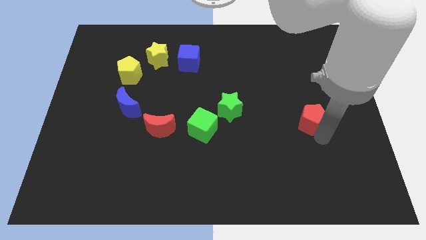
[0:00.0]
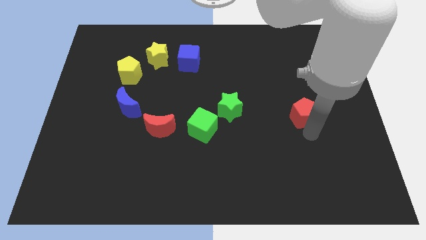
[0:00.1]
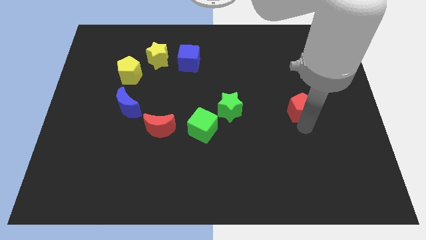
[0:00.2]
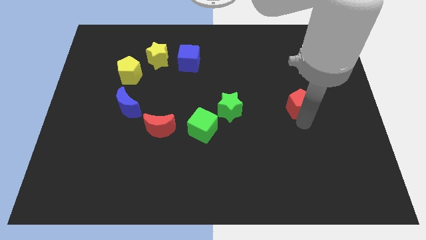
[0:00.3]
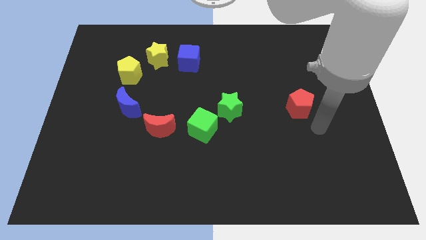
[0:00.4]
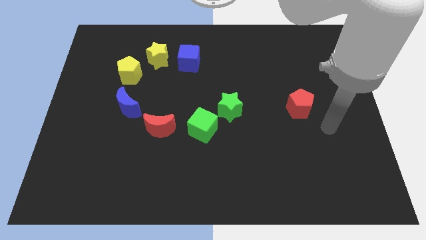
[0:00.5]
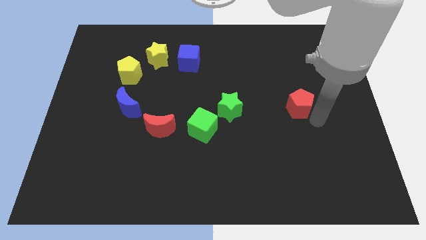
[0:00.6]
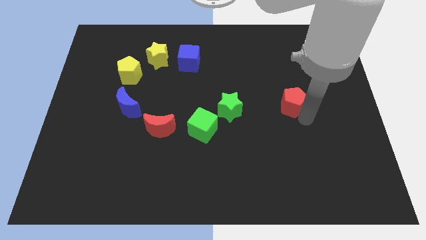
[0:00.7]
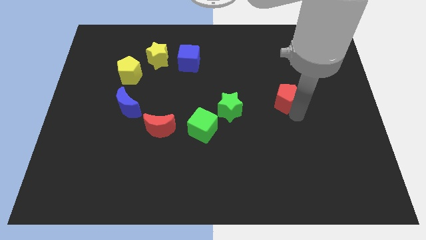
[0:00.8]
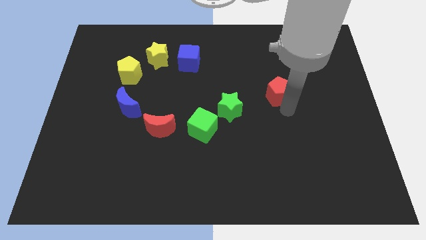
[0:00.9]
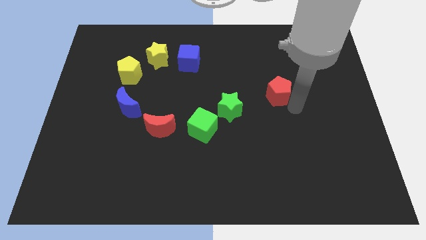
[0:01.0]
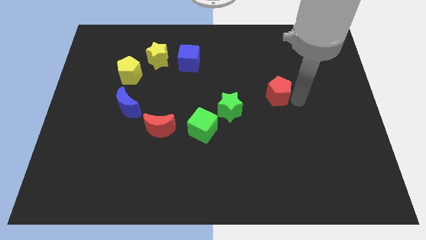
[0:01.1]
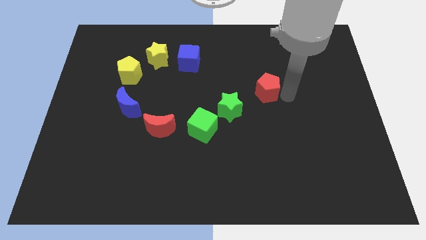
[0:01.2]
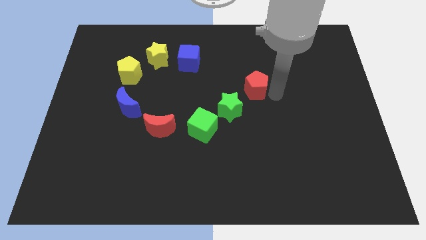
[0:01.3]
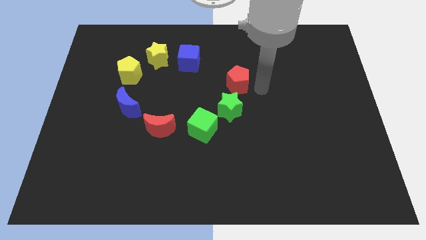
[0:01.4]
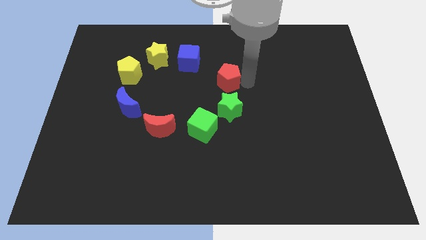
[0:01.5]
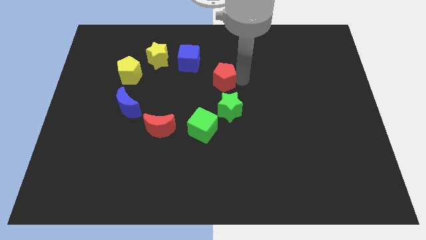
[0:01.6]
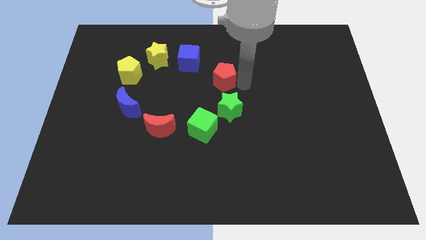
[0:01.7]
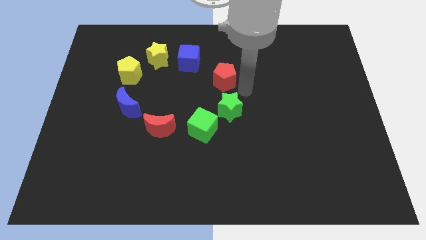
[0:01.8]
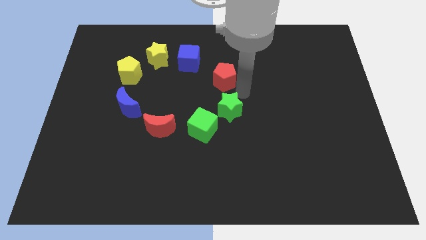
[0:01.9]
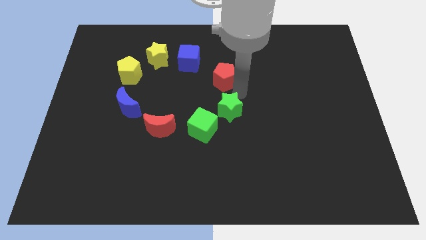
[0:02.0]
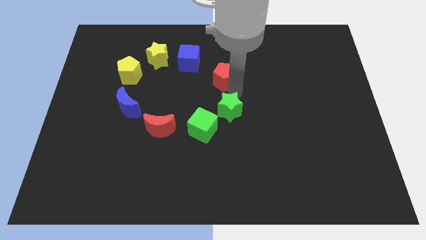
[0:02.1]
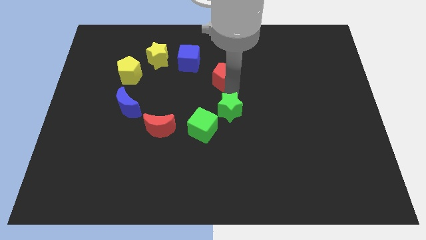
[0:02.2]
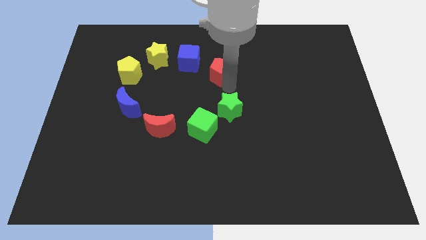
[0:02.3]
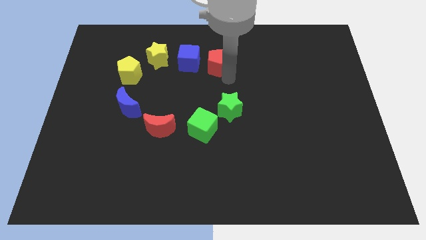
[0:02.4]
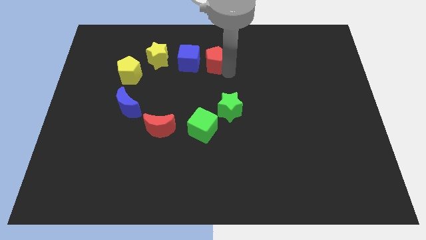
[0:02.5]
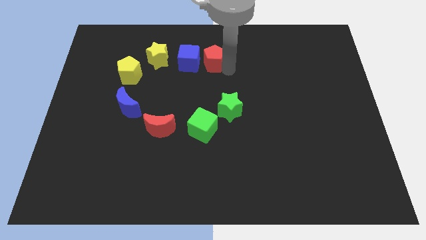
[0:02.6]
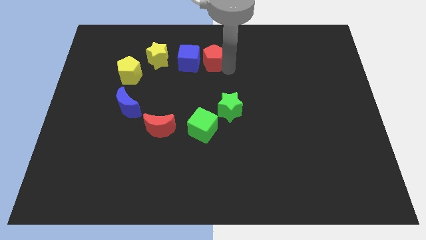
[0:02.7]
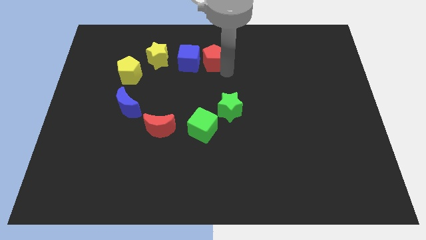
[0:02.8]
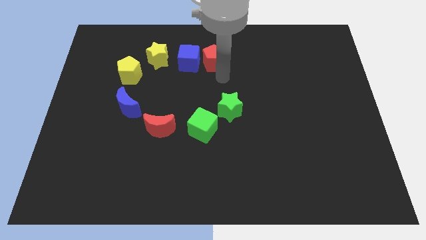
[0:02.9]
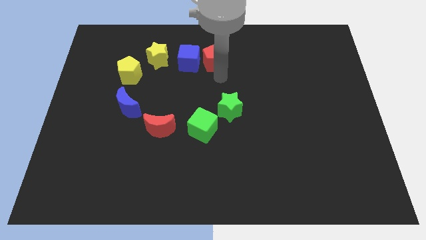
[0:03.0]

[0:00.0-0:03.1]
place the red pentagon beside blue cube

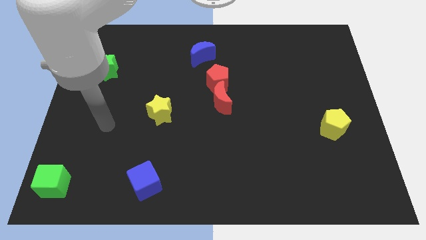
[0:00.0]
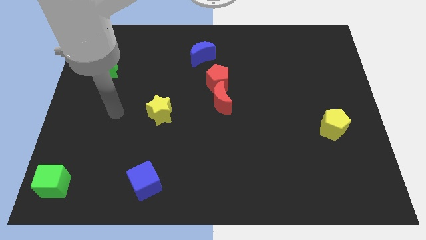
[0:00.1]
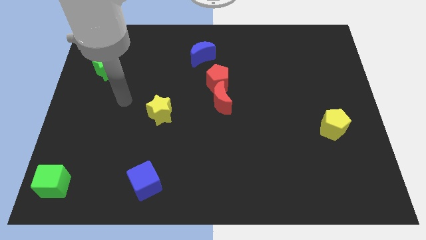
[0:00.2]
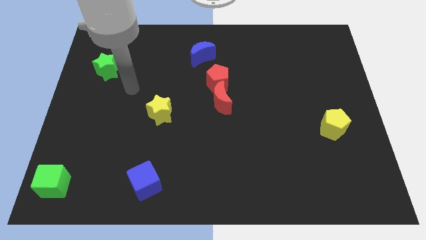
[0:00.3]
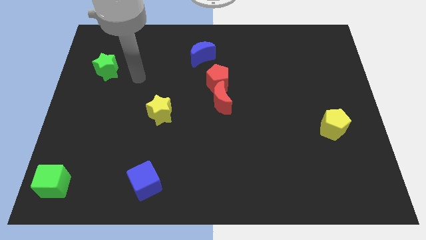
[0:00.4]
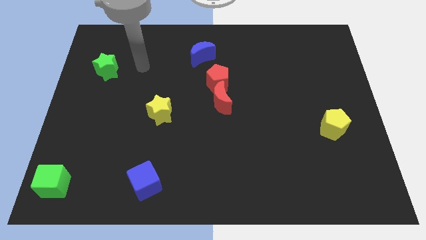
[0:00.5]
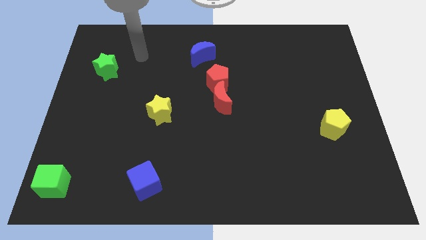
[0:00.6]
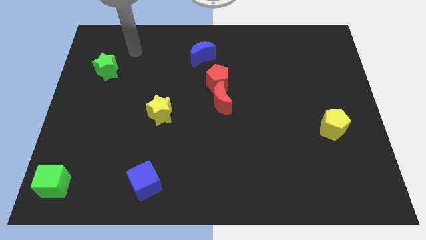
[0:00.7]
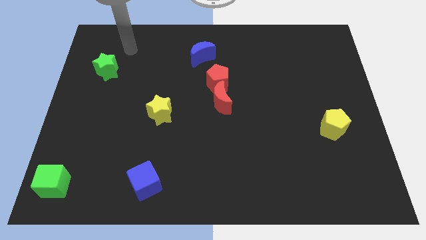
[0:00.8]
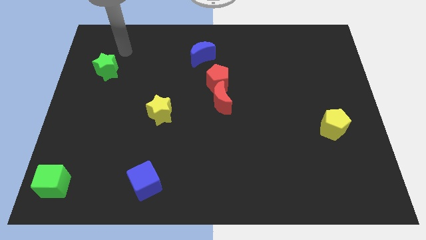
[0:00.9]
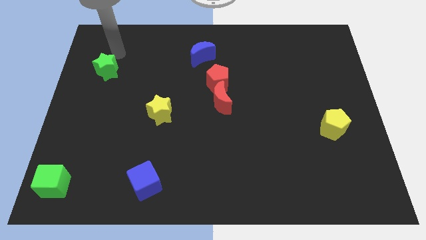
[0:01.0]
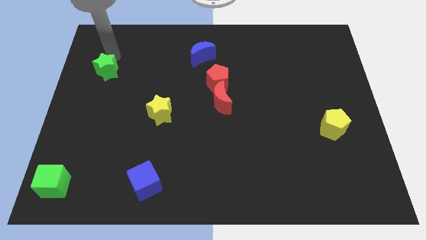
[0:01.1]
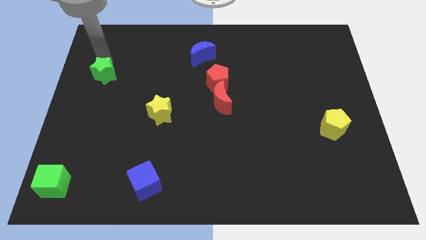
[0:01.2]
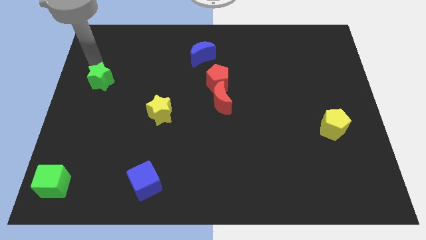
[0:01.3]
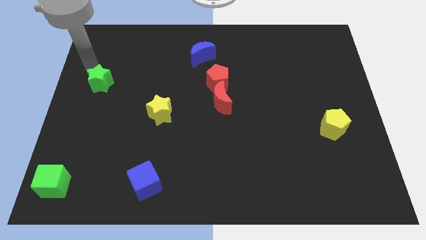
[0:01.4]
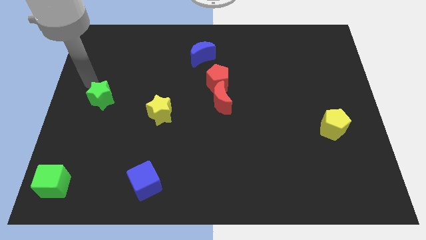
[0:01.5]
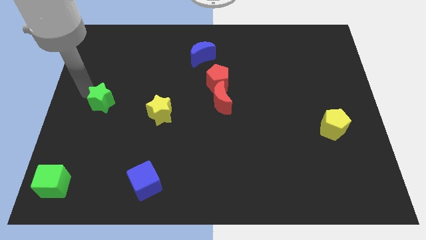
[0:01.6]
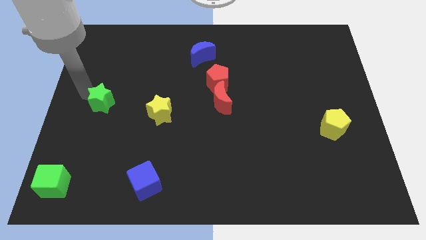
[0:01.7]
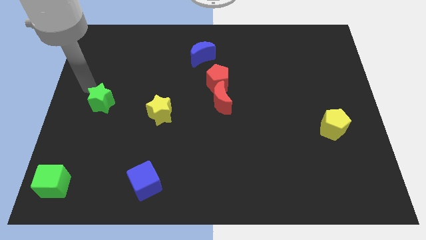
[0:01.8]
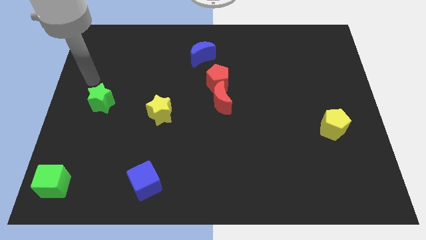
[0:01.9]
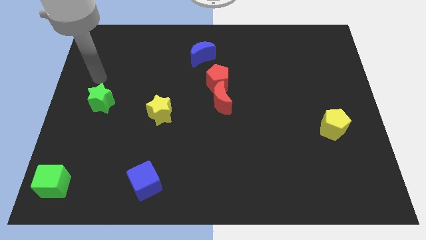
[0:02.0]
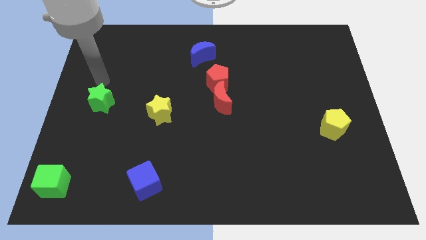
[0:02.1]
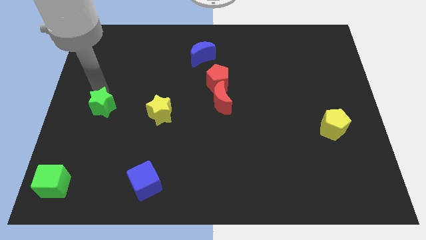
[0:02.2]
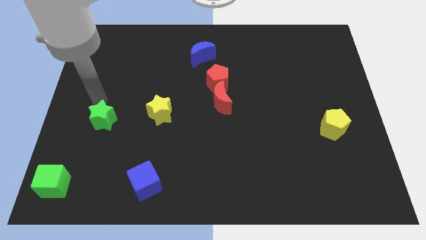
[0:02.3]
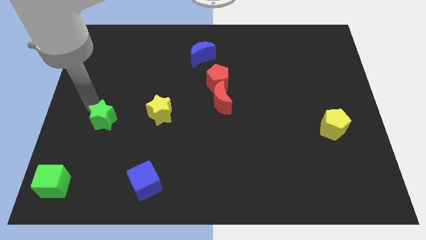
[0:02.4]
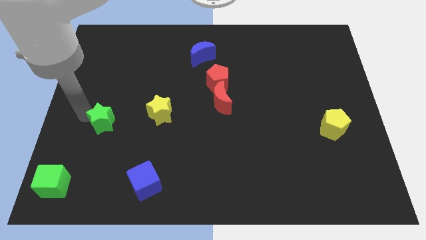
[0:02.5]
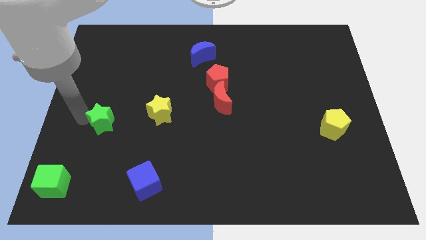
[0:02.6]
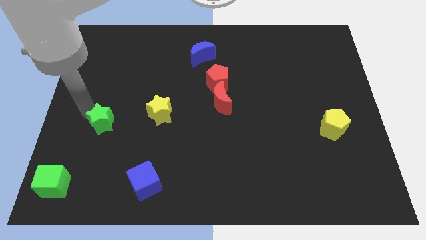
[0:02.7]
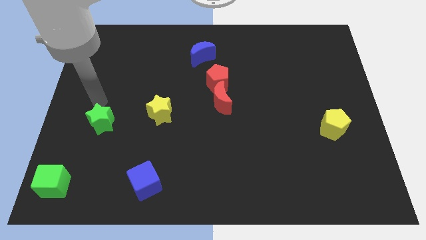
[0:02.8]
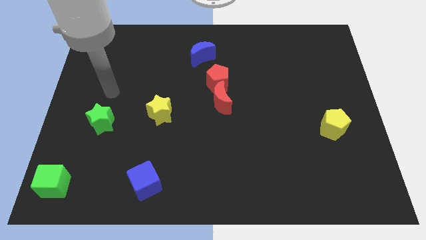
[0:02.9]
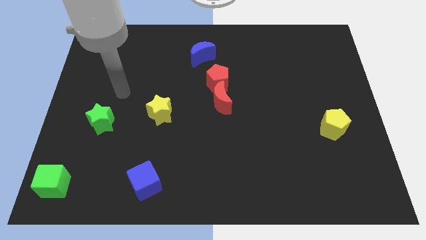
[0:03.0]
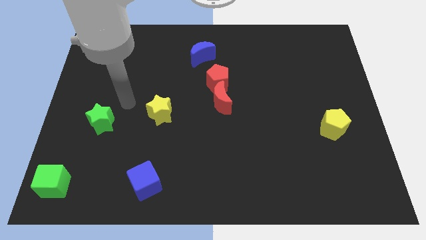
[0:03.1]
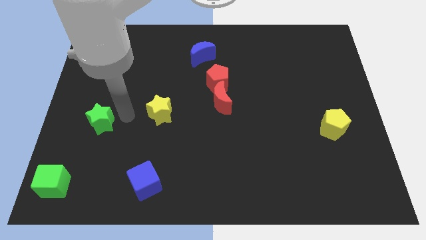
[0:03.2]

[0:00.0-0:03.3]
place the green star diagonally top right to green cube

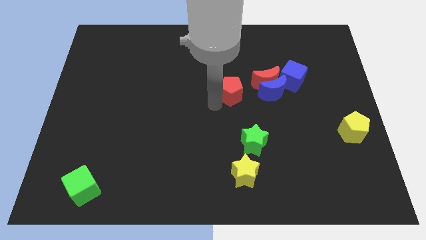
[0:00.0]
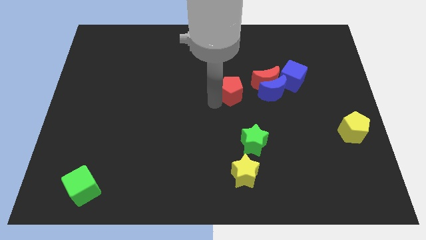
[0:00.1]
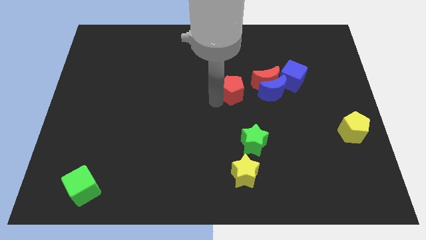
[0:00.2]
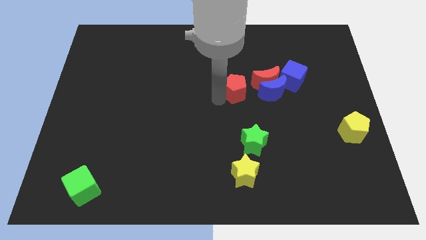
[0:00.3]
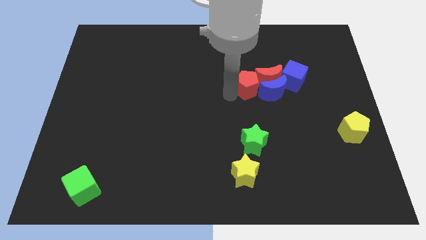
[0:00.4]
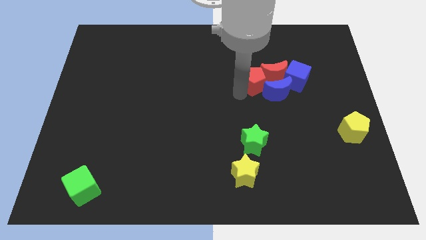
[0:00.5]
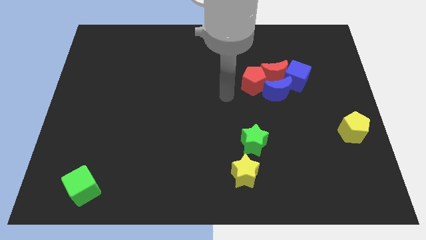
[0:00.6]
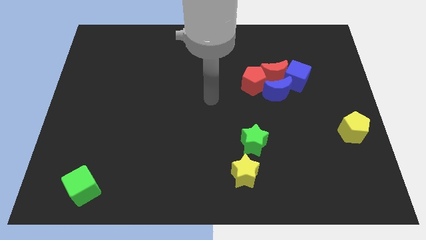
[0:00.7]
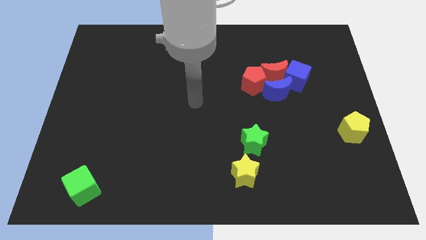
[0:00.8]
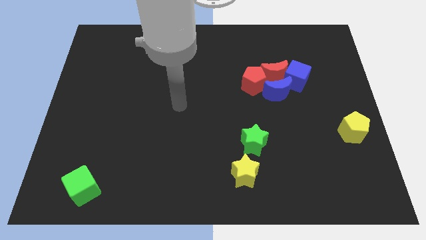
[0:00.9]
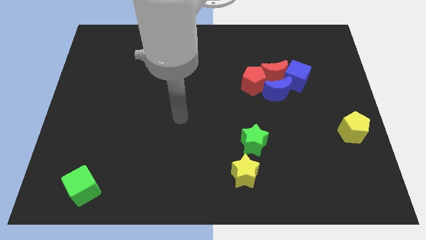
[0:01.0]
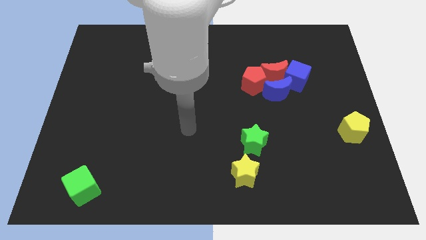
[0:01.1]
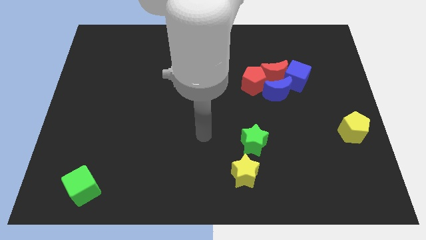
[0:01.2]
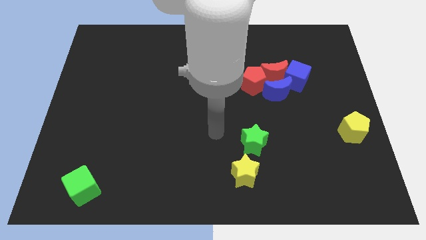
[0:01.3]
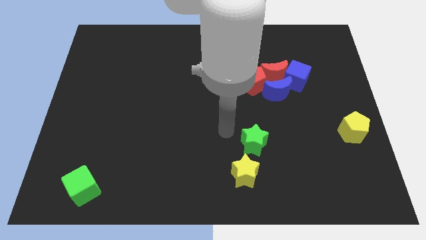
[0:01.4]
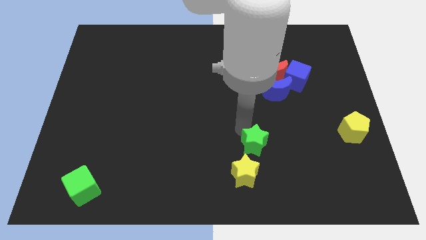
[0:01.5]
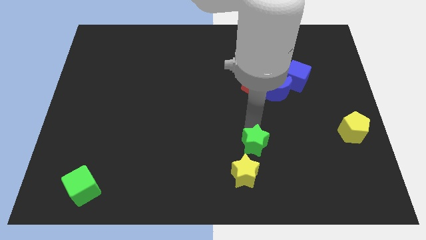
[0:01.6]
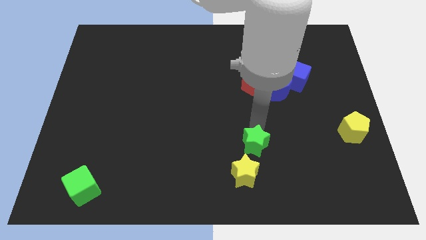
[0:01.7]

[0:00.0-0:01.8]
push red pentagon in to red moon

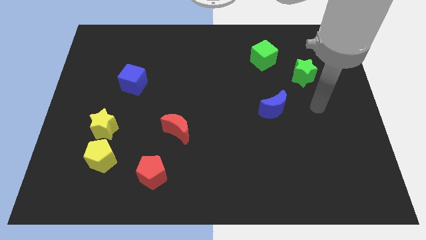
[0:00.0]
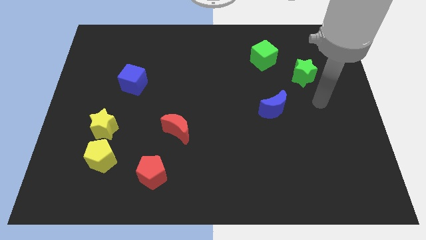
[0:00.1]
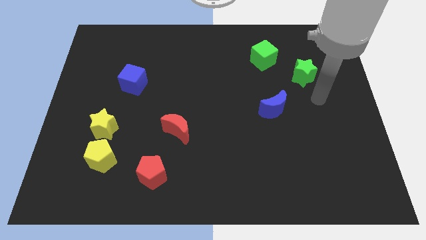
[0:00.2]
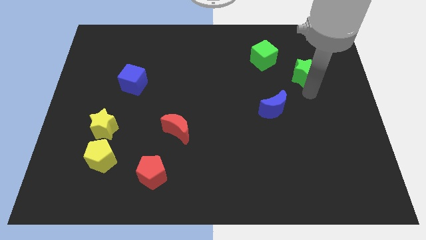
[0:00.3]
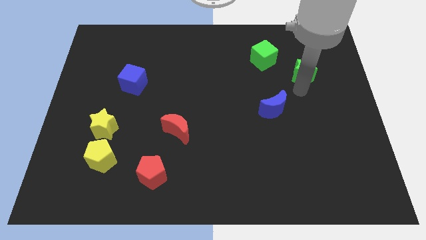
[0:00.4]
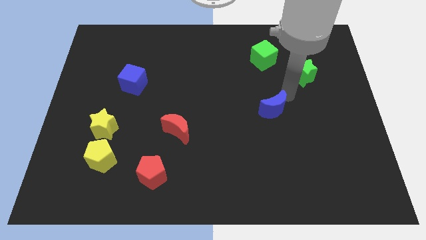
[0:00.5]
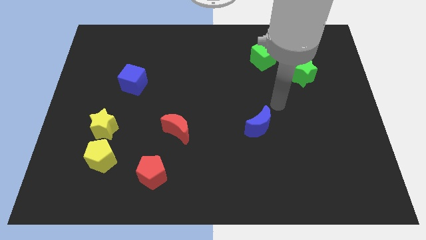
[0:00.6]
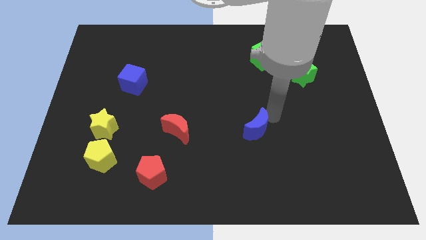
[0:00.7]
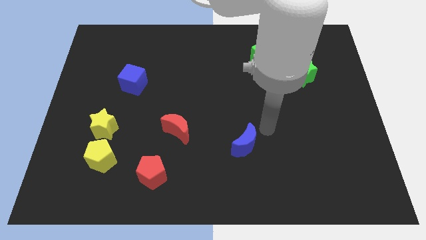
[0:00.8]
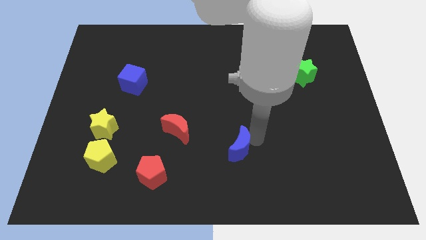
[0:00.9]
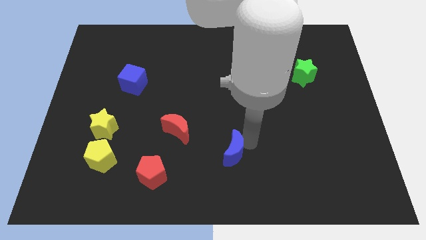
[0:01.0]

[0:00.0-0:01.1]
put the blue moon diagonally bottom right to the red moon
